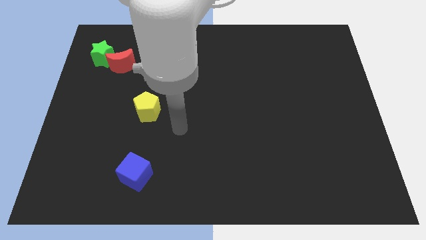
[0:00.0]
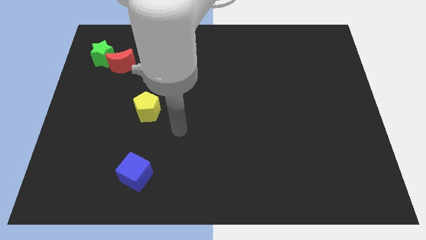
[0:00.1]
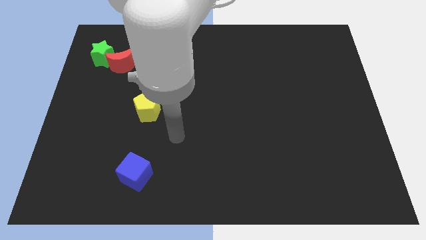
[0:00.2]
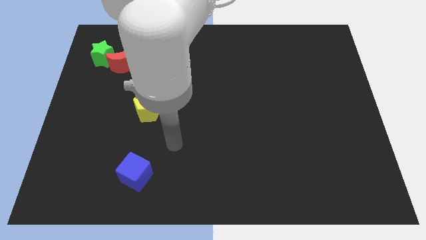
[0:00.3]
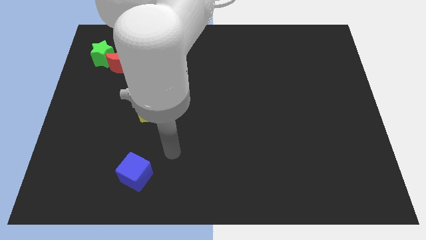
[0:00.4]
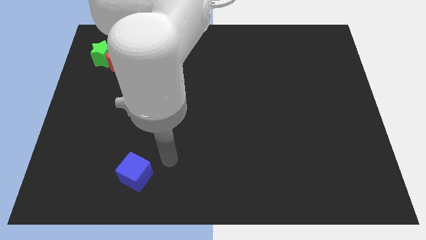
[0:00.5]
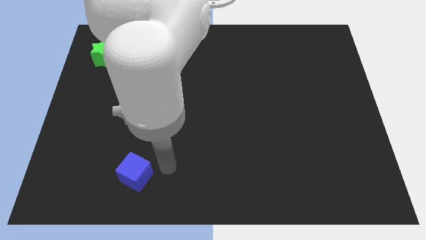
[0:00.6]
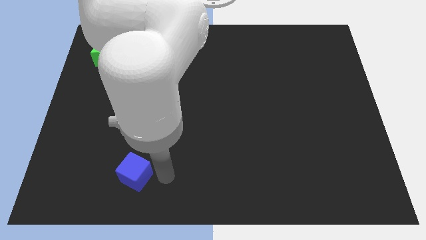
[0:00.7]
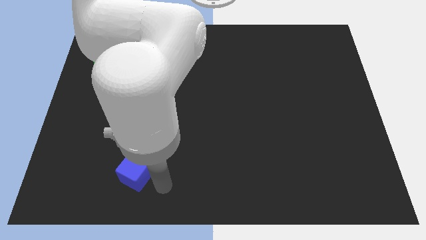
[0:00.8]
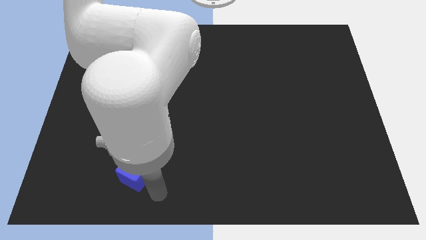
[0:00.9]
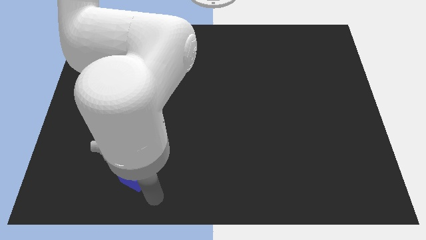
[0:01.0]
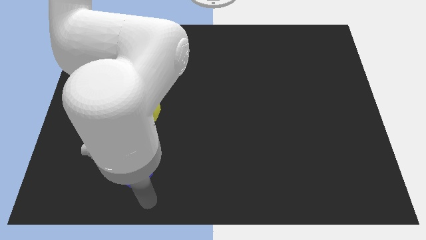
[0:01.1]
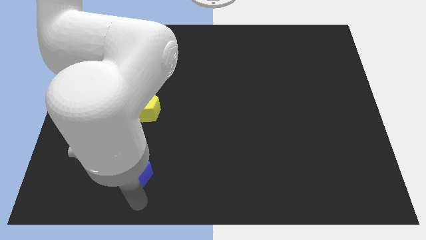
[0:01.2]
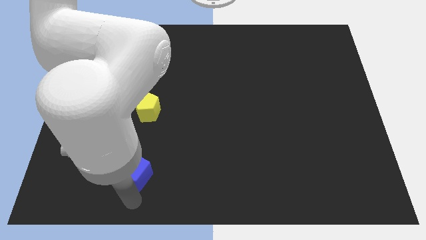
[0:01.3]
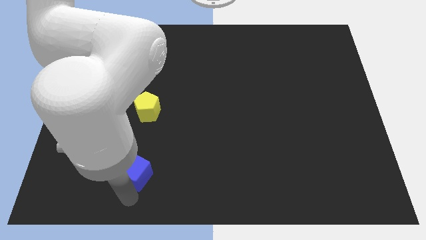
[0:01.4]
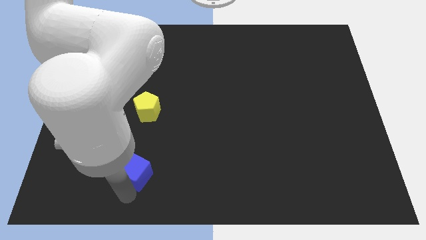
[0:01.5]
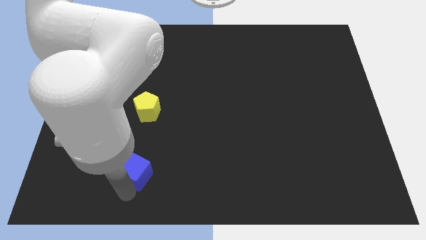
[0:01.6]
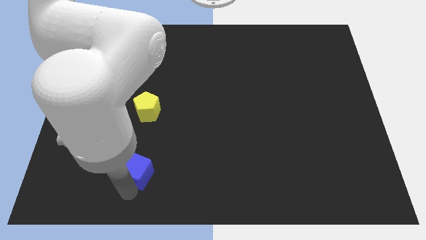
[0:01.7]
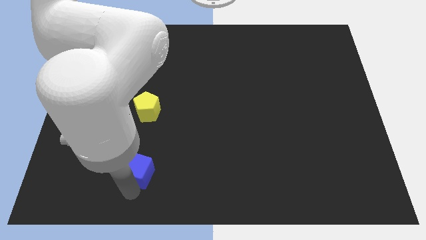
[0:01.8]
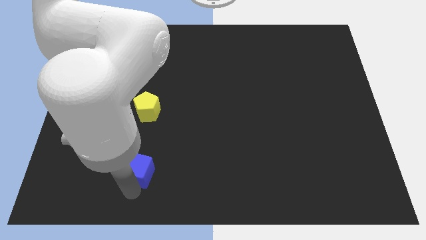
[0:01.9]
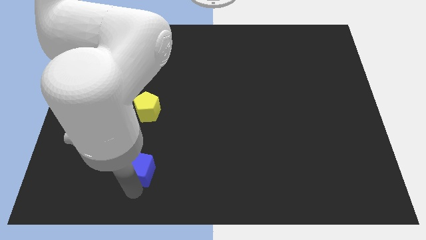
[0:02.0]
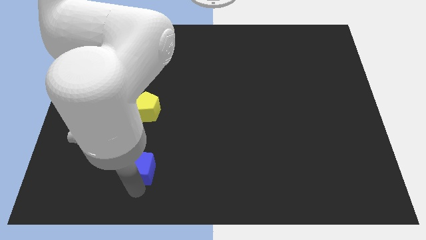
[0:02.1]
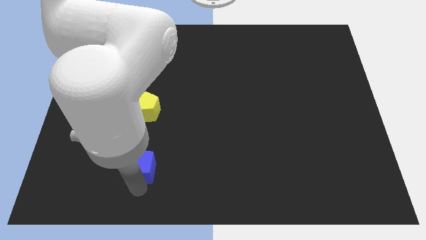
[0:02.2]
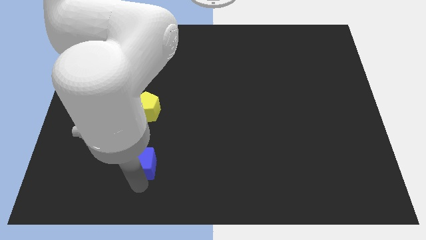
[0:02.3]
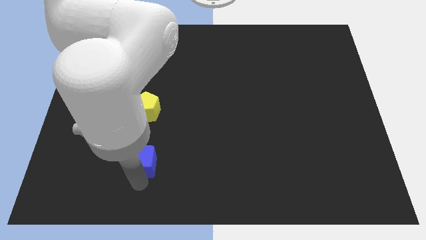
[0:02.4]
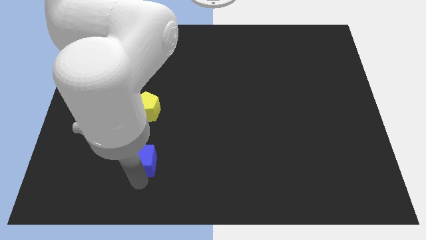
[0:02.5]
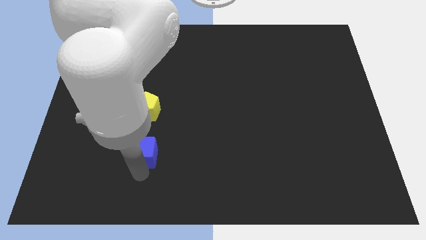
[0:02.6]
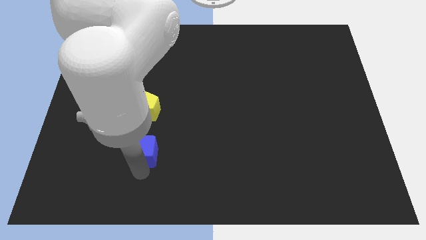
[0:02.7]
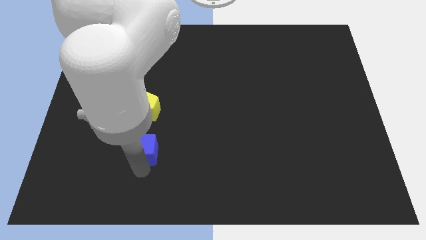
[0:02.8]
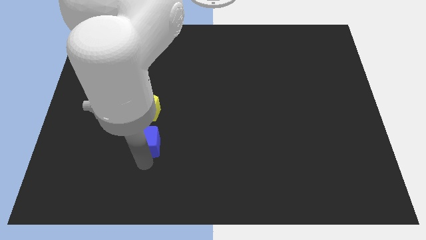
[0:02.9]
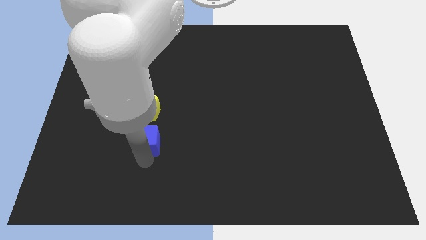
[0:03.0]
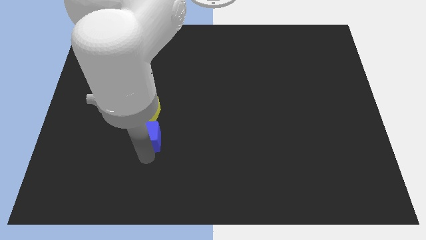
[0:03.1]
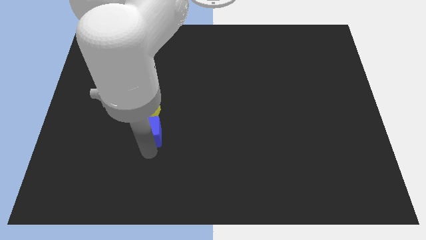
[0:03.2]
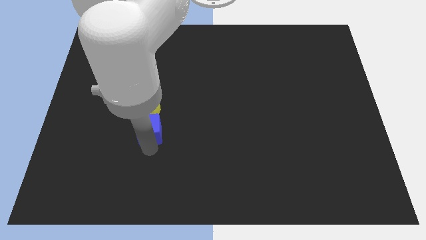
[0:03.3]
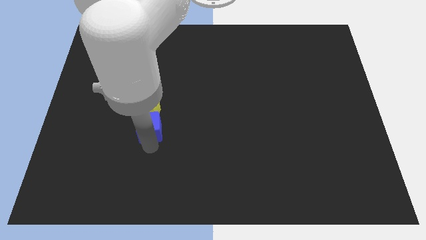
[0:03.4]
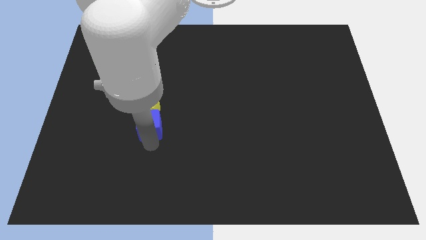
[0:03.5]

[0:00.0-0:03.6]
move the cube close to the pentagon

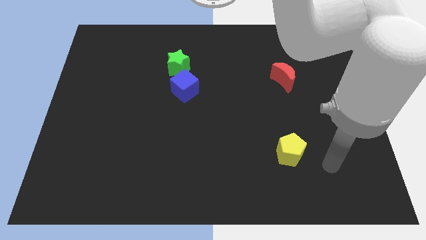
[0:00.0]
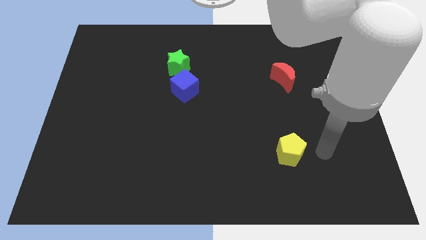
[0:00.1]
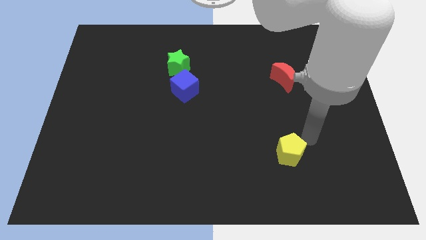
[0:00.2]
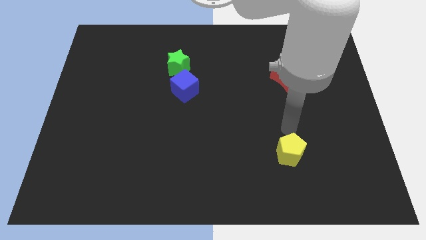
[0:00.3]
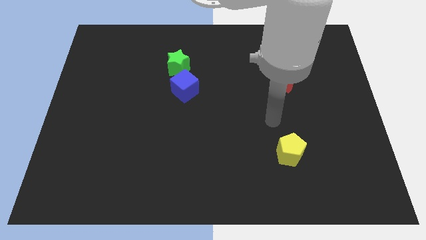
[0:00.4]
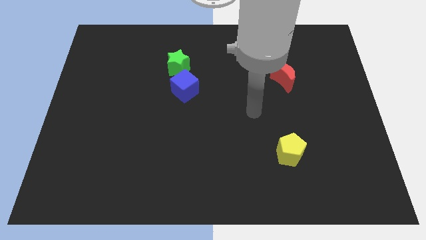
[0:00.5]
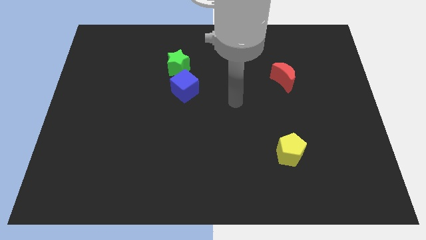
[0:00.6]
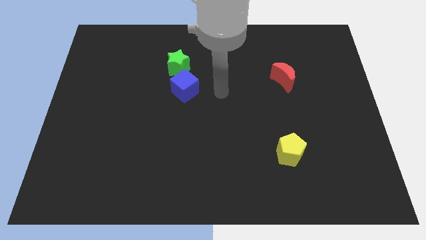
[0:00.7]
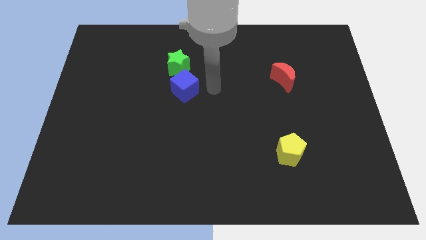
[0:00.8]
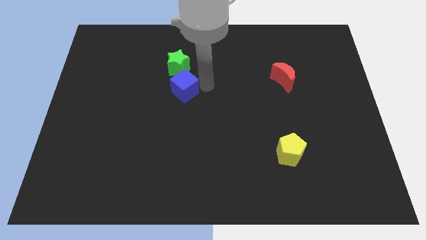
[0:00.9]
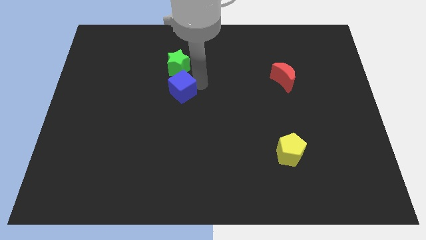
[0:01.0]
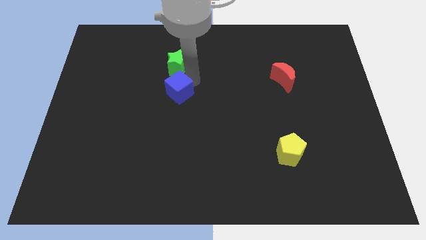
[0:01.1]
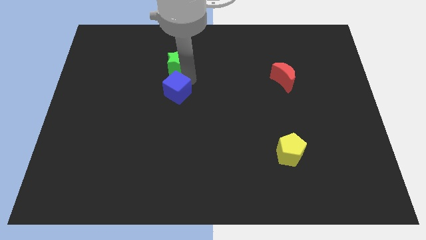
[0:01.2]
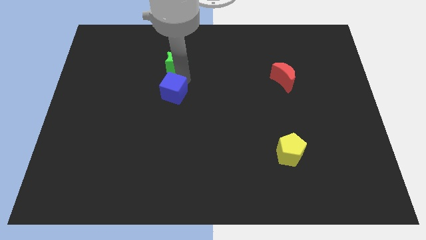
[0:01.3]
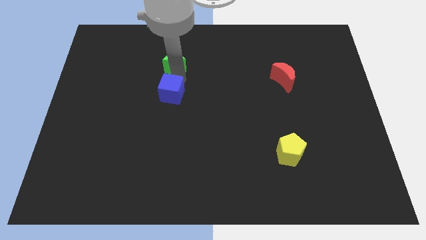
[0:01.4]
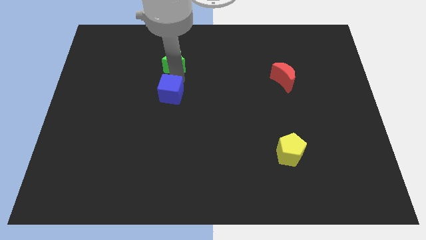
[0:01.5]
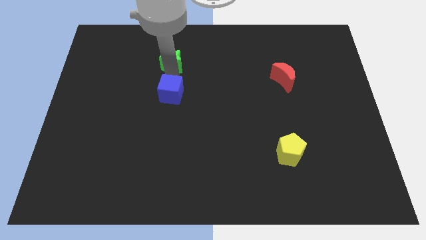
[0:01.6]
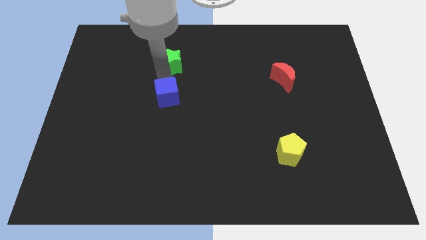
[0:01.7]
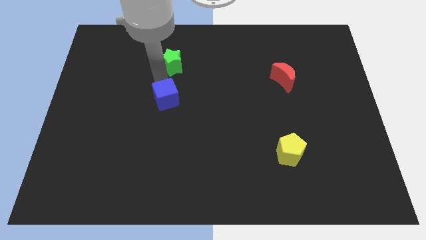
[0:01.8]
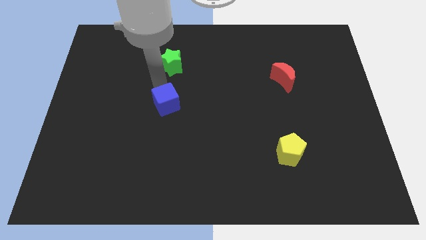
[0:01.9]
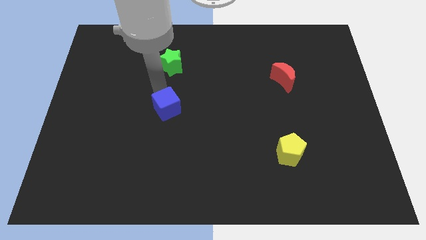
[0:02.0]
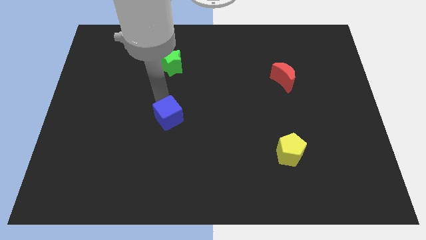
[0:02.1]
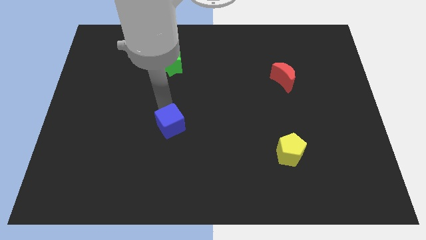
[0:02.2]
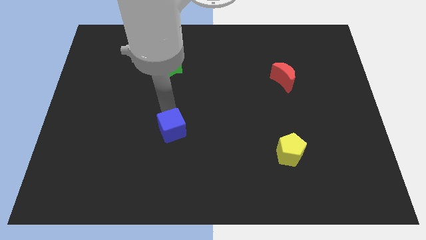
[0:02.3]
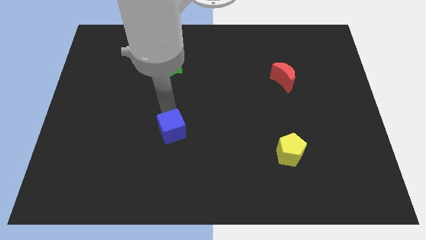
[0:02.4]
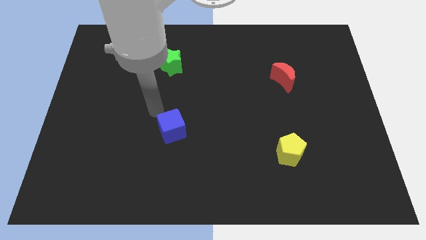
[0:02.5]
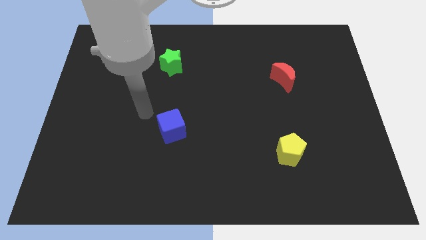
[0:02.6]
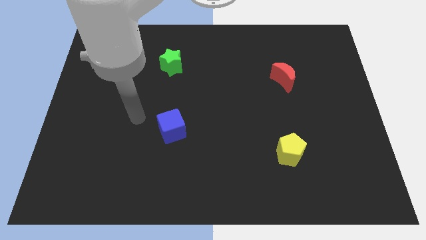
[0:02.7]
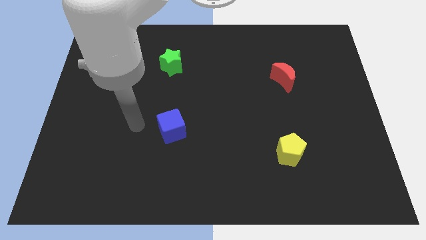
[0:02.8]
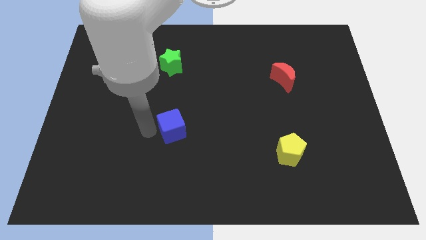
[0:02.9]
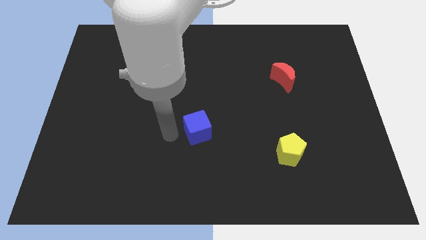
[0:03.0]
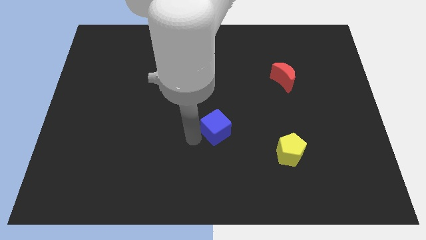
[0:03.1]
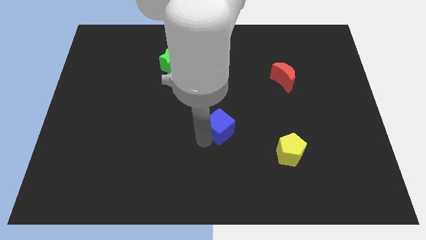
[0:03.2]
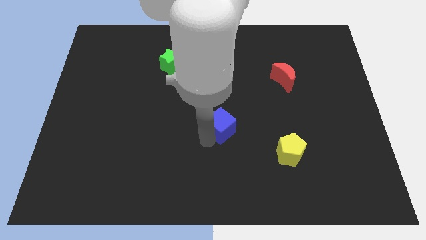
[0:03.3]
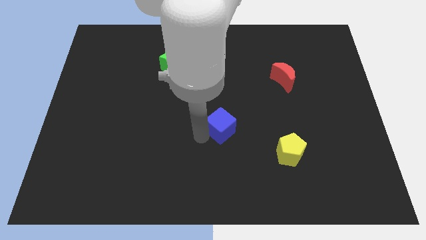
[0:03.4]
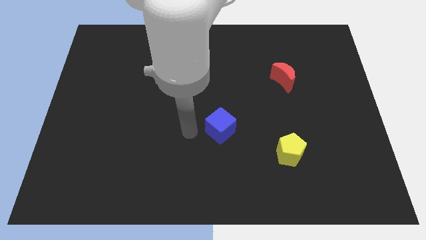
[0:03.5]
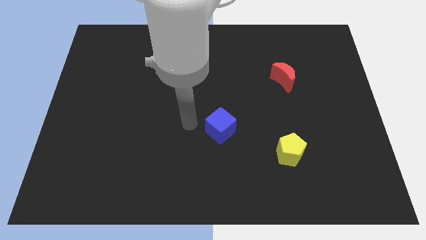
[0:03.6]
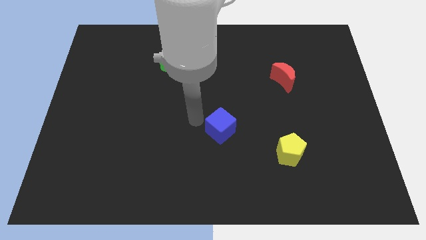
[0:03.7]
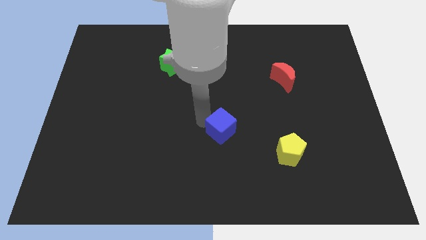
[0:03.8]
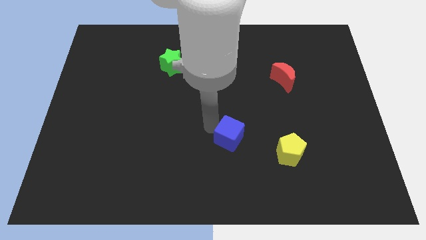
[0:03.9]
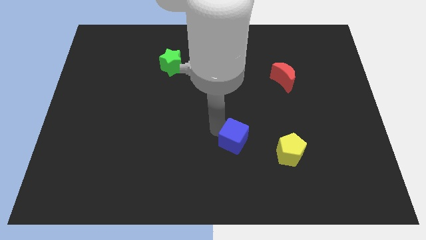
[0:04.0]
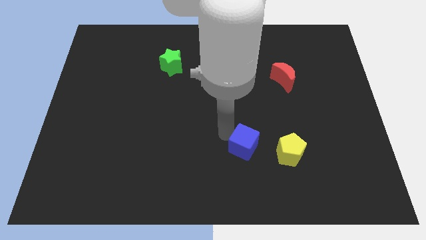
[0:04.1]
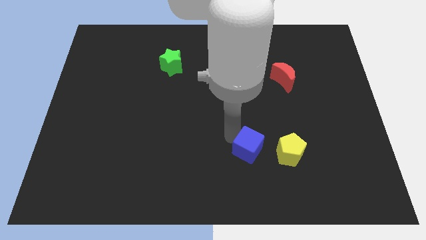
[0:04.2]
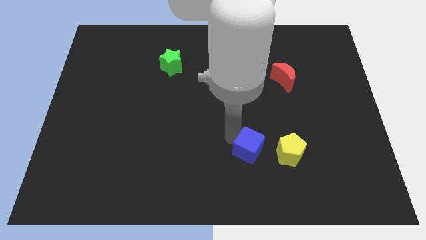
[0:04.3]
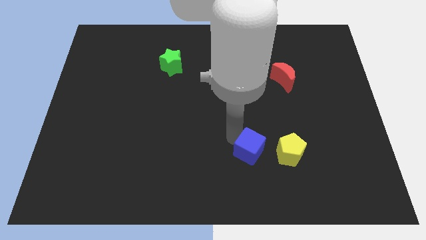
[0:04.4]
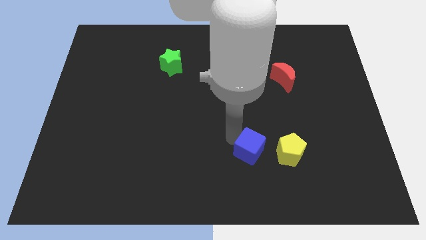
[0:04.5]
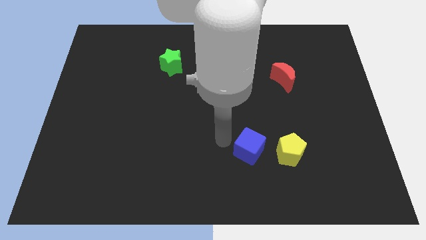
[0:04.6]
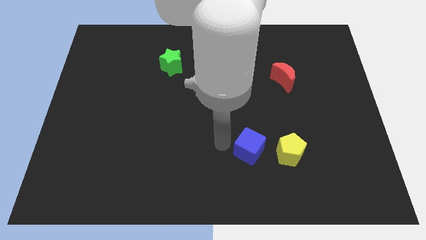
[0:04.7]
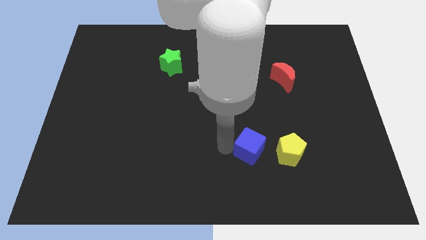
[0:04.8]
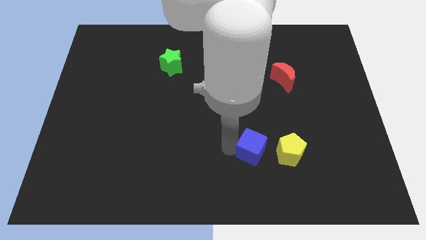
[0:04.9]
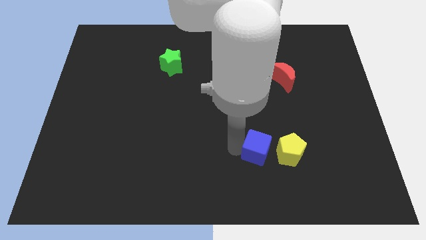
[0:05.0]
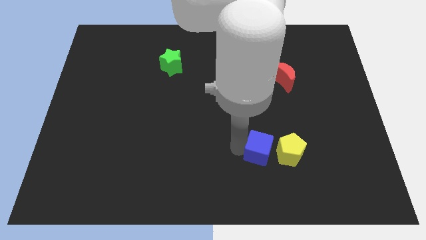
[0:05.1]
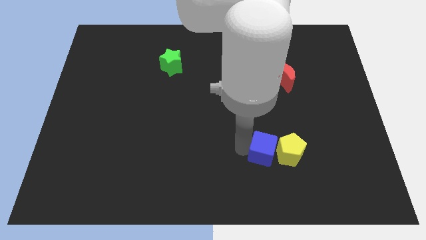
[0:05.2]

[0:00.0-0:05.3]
slide the blue block next to the pentagon
